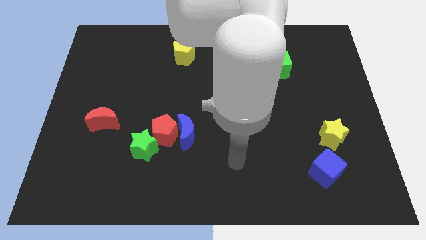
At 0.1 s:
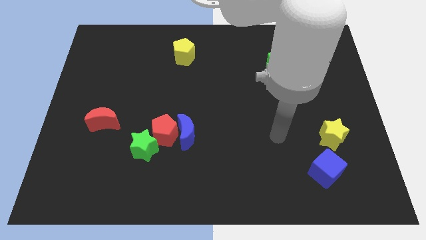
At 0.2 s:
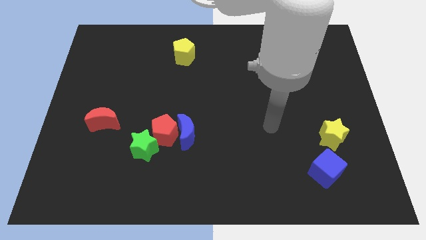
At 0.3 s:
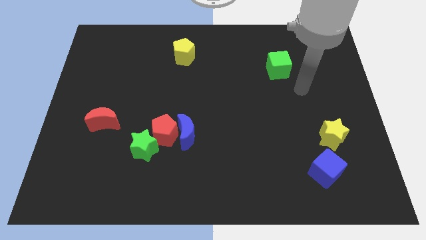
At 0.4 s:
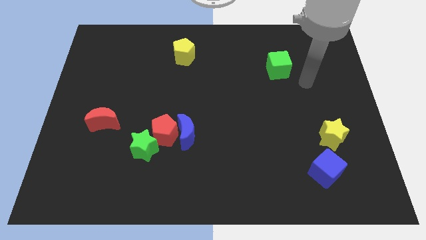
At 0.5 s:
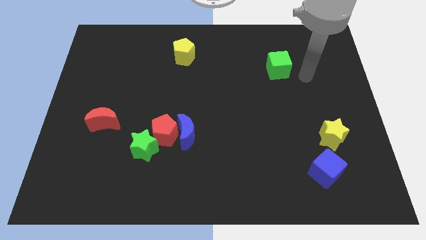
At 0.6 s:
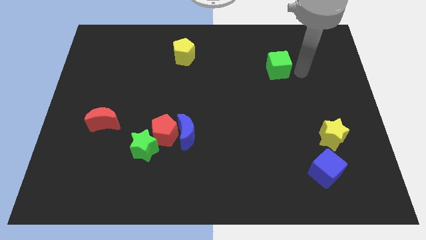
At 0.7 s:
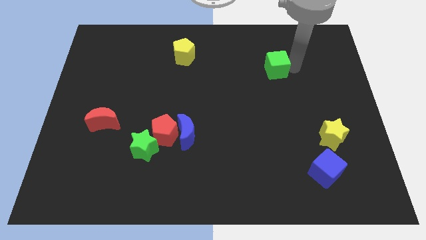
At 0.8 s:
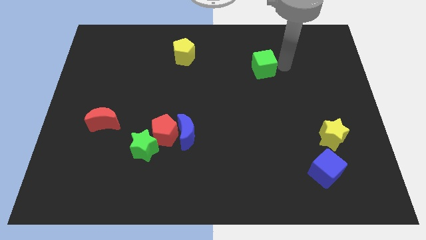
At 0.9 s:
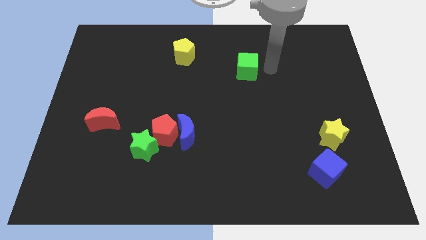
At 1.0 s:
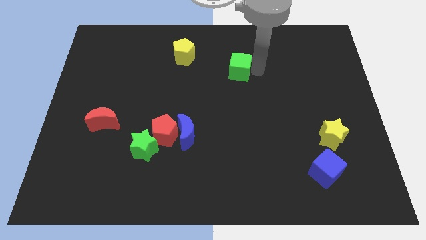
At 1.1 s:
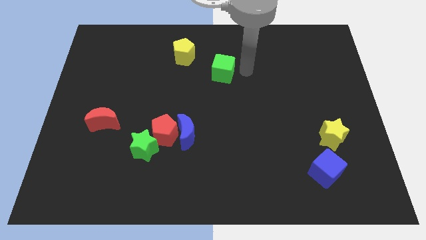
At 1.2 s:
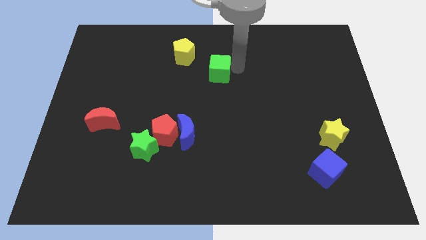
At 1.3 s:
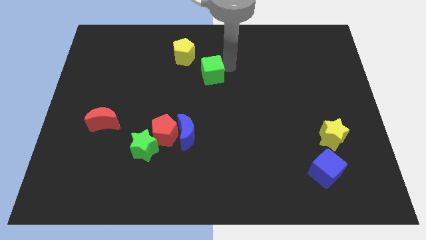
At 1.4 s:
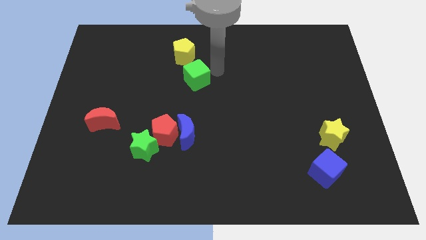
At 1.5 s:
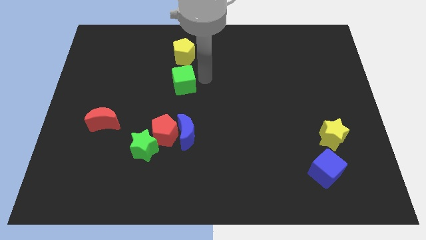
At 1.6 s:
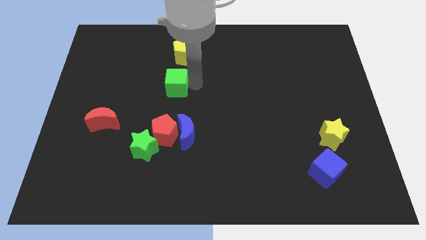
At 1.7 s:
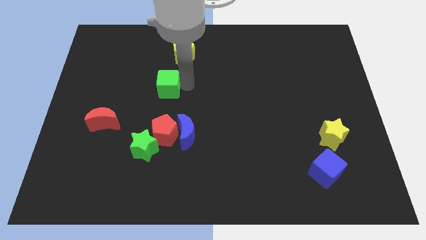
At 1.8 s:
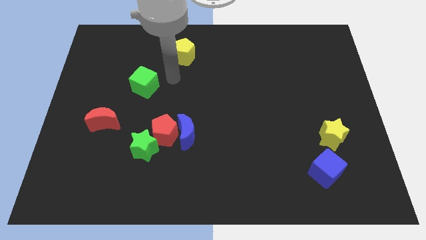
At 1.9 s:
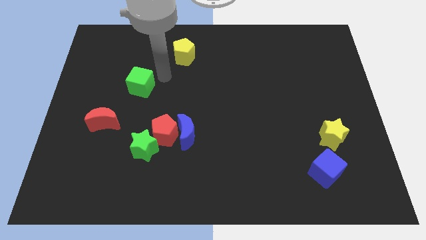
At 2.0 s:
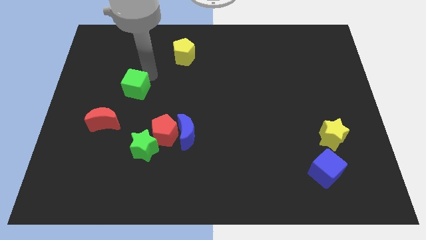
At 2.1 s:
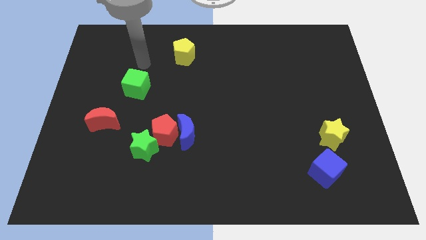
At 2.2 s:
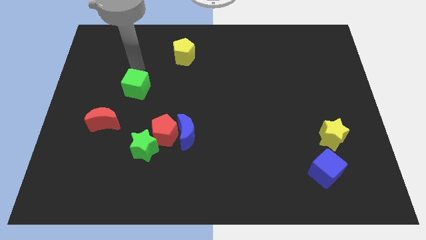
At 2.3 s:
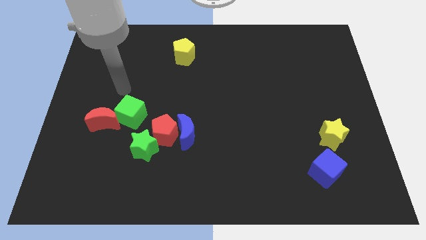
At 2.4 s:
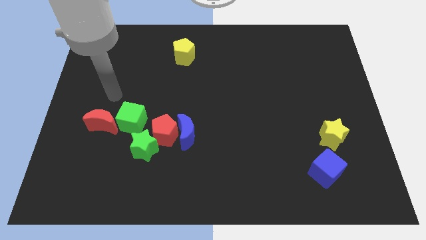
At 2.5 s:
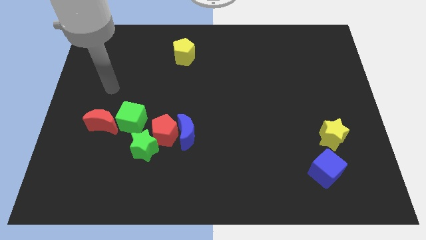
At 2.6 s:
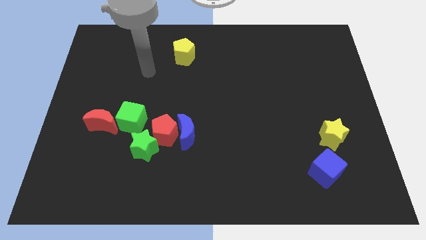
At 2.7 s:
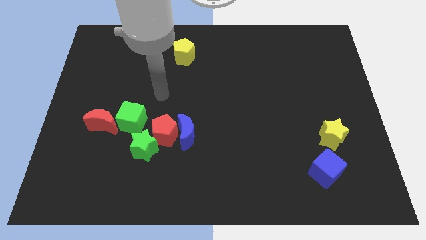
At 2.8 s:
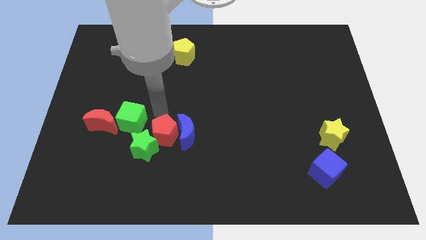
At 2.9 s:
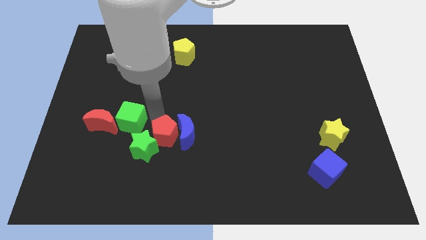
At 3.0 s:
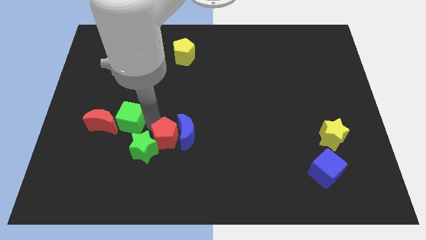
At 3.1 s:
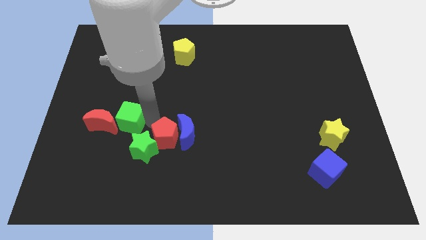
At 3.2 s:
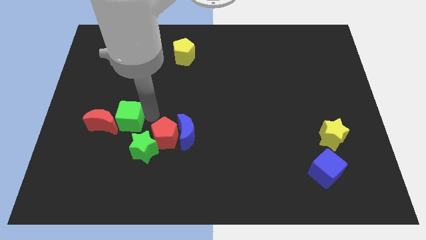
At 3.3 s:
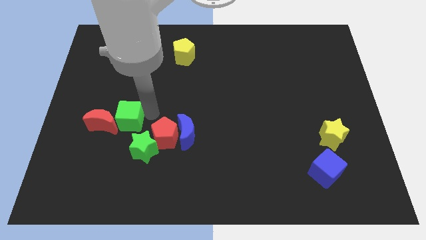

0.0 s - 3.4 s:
slide the green cube close to the red moon

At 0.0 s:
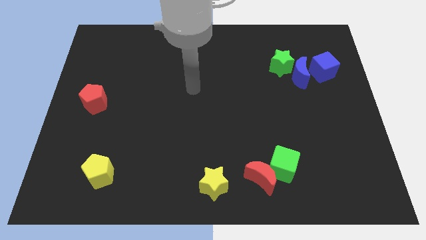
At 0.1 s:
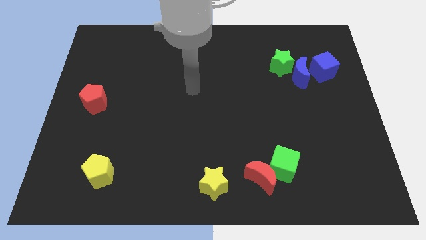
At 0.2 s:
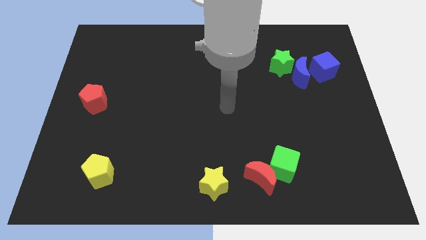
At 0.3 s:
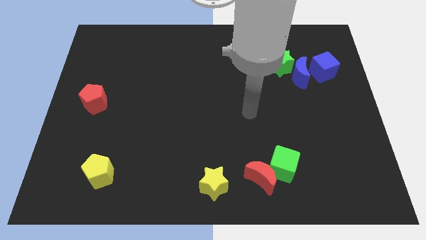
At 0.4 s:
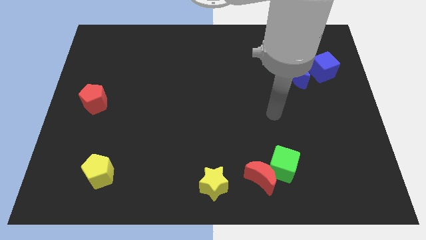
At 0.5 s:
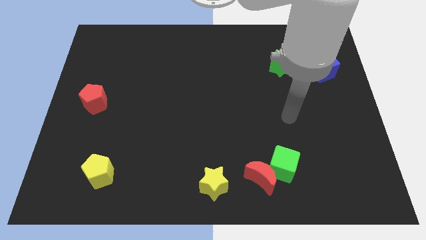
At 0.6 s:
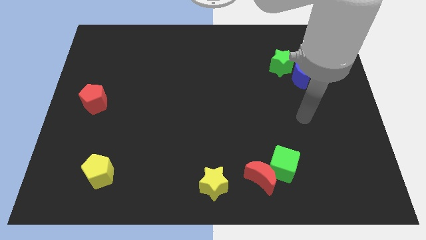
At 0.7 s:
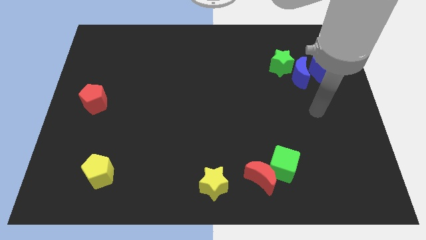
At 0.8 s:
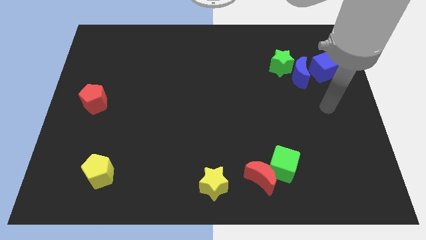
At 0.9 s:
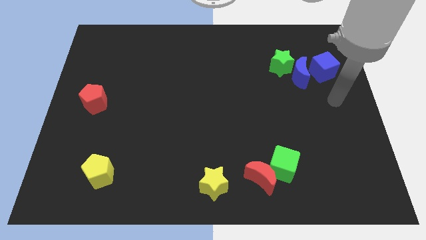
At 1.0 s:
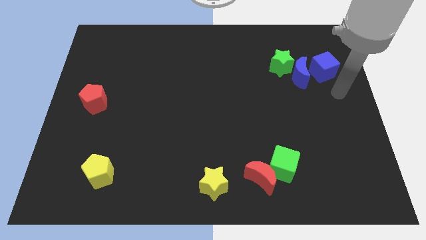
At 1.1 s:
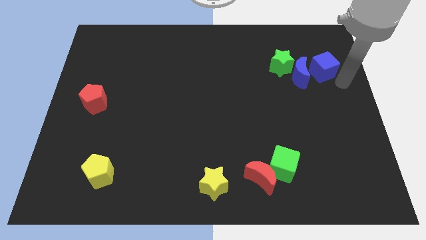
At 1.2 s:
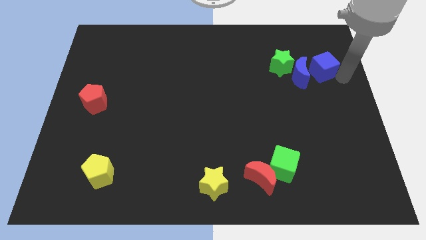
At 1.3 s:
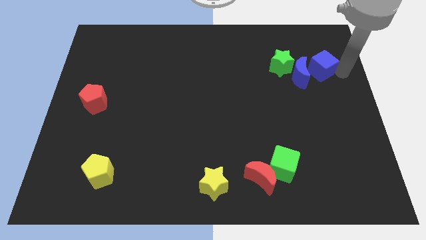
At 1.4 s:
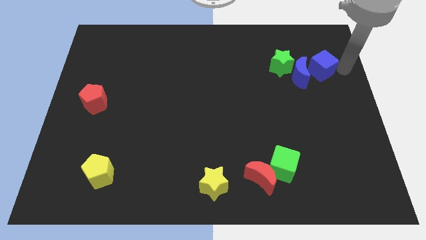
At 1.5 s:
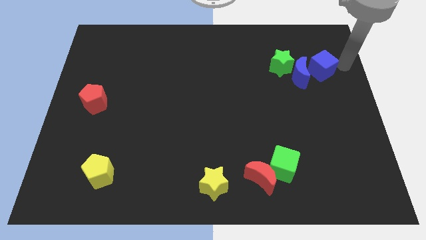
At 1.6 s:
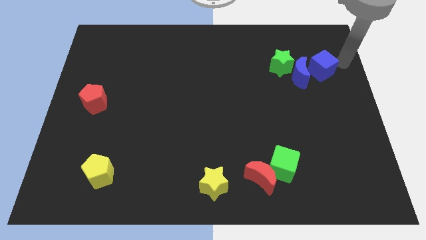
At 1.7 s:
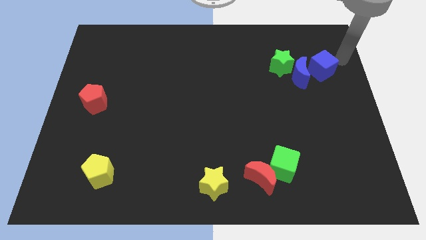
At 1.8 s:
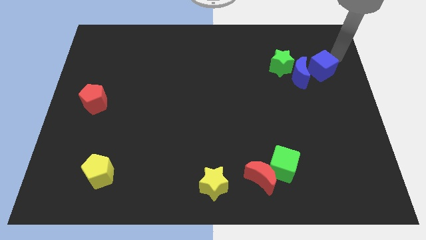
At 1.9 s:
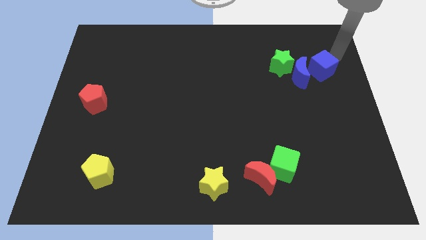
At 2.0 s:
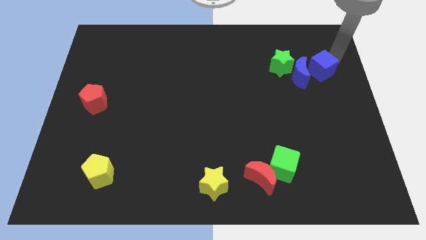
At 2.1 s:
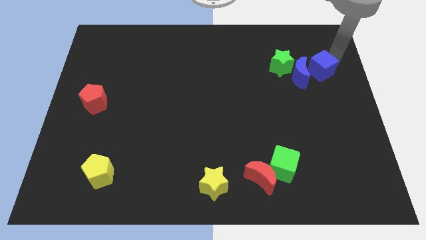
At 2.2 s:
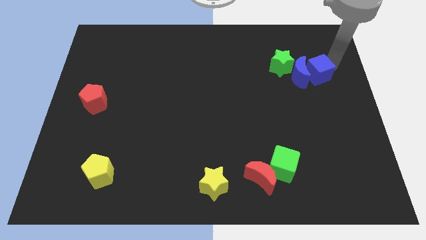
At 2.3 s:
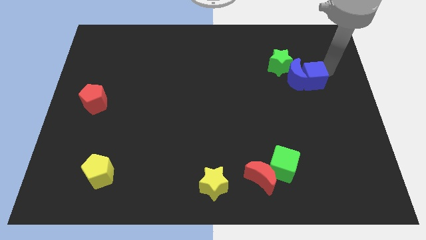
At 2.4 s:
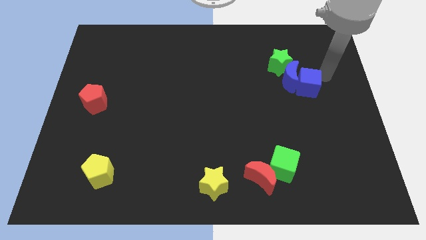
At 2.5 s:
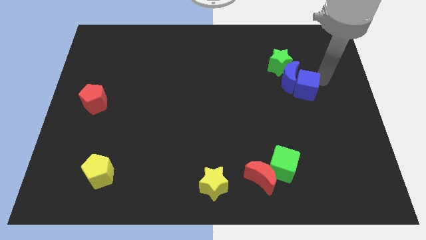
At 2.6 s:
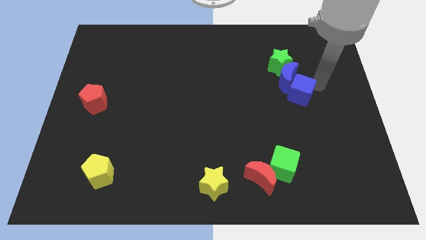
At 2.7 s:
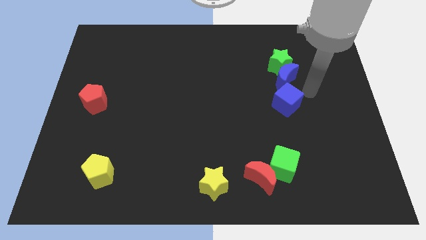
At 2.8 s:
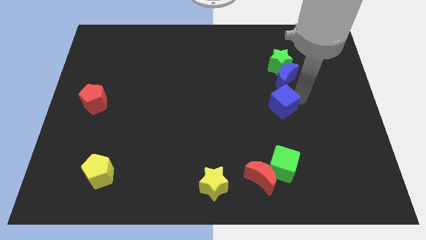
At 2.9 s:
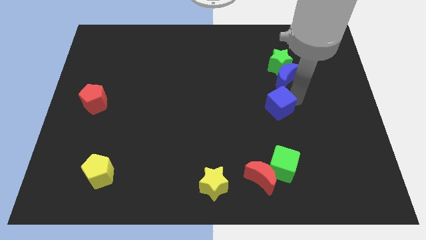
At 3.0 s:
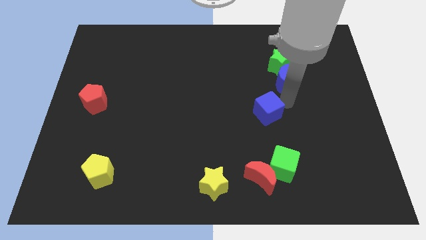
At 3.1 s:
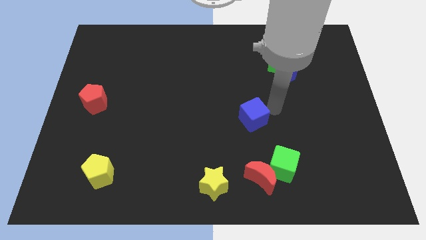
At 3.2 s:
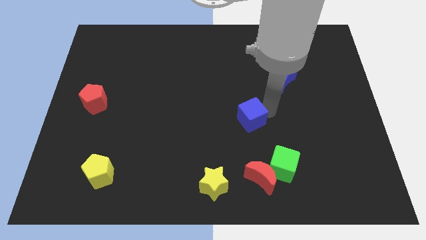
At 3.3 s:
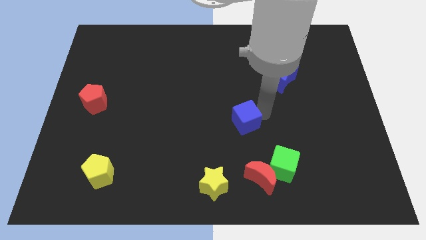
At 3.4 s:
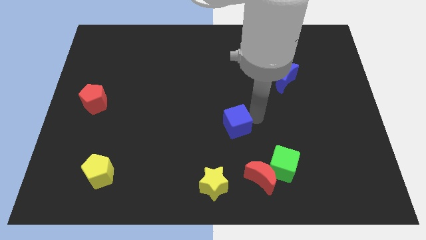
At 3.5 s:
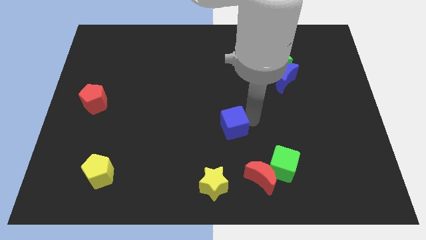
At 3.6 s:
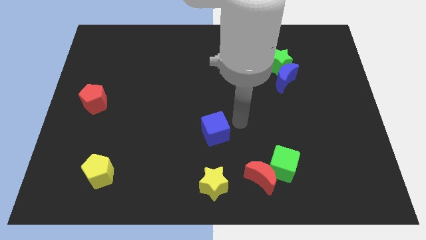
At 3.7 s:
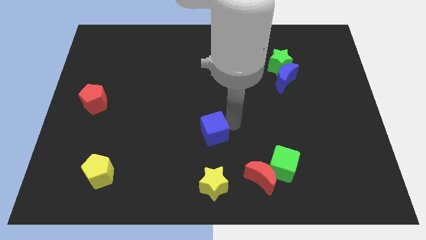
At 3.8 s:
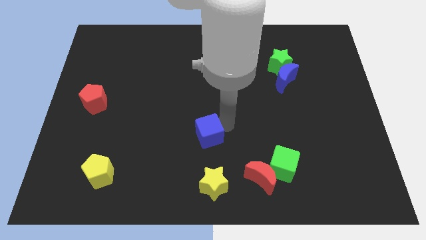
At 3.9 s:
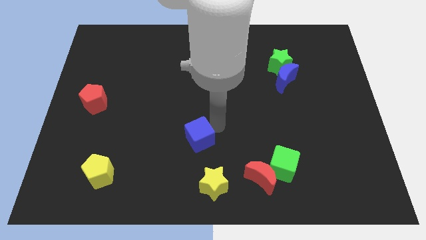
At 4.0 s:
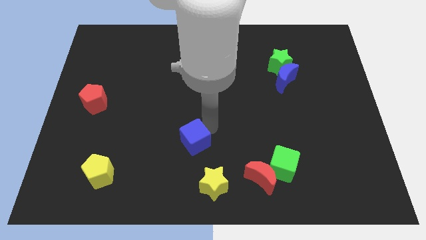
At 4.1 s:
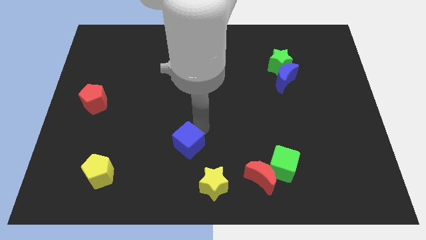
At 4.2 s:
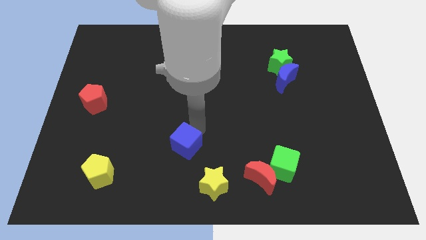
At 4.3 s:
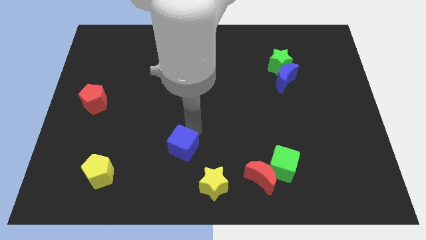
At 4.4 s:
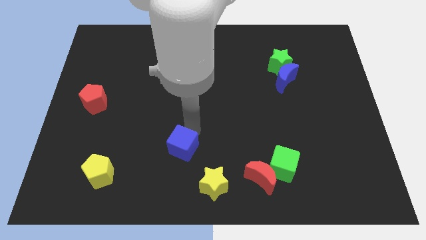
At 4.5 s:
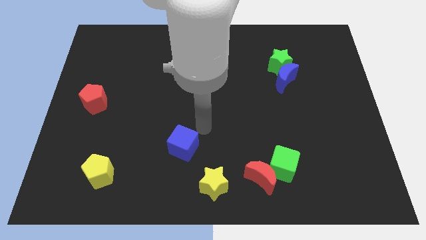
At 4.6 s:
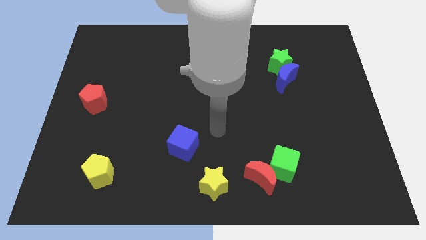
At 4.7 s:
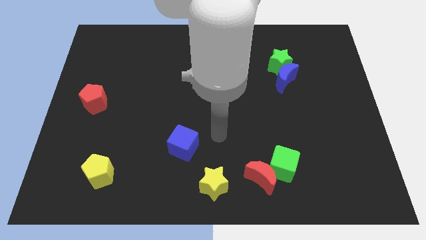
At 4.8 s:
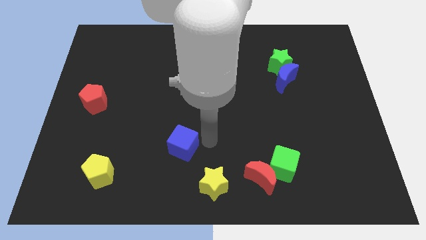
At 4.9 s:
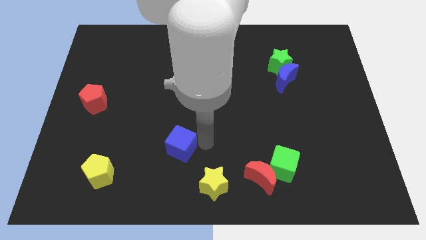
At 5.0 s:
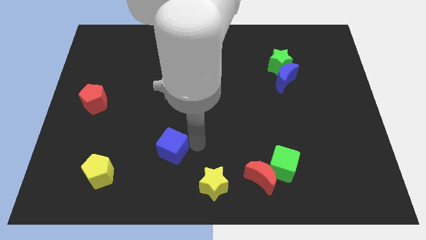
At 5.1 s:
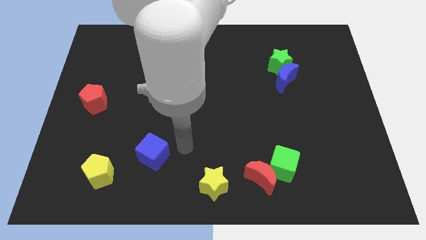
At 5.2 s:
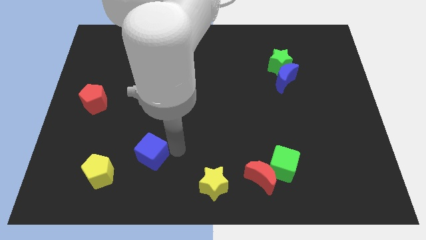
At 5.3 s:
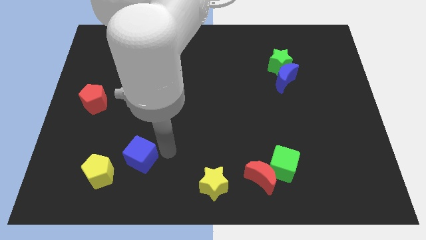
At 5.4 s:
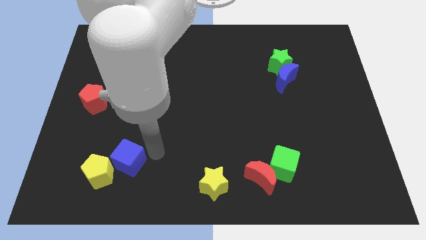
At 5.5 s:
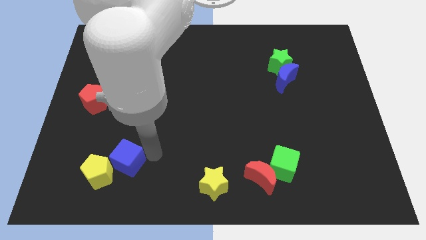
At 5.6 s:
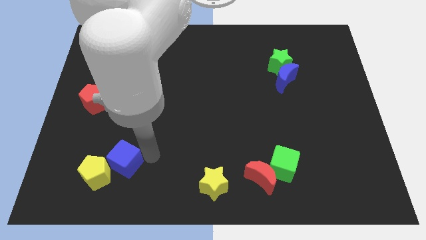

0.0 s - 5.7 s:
put the blue cube towards the yellow pentagon
